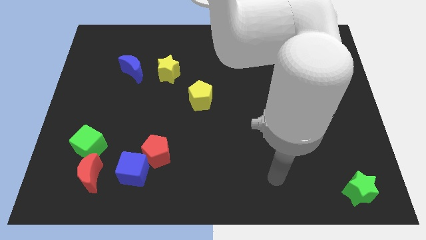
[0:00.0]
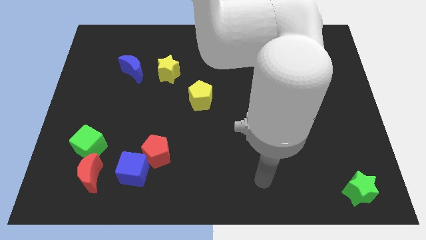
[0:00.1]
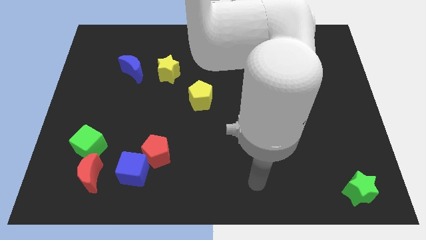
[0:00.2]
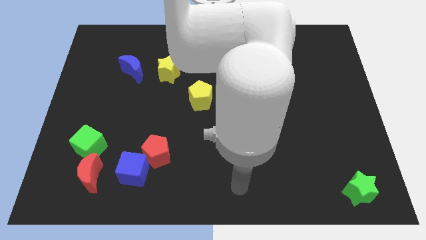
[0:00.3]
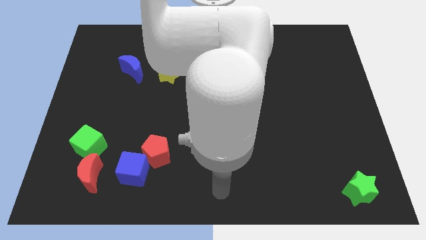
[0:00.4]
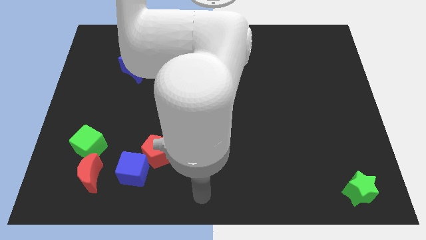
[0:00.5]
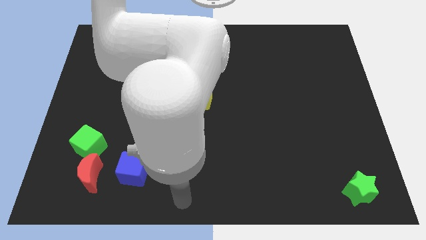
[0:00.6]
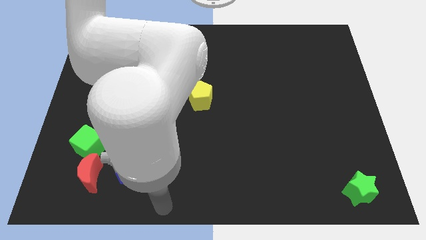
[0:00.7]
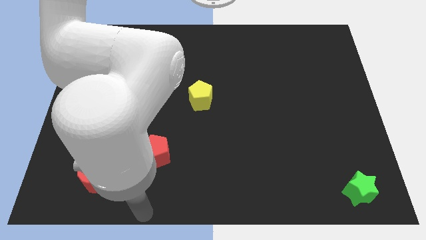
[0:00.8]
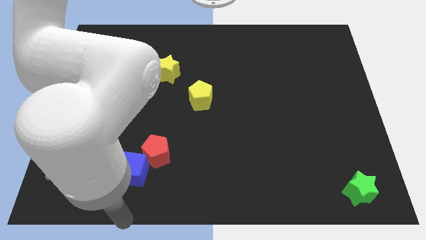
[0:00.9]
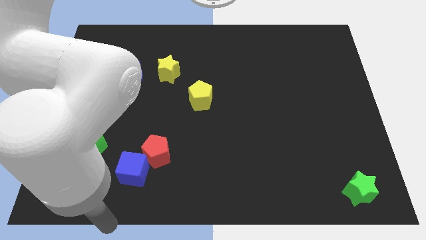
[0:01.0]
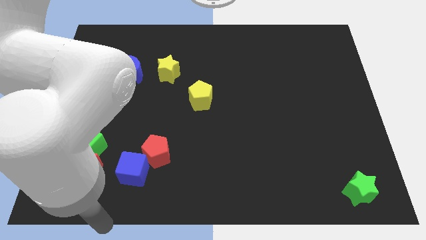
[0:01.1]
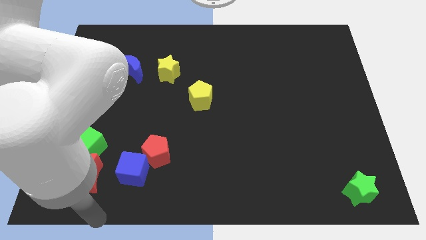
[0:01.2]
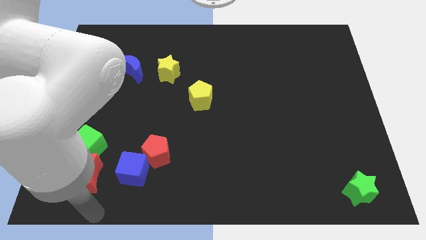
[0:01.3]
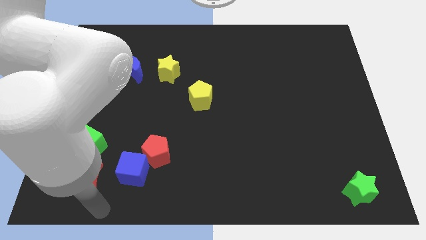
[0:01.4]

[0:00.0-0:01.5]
move the arm near the red moon

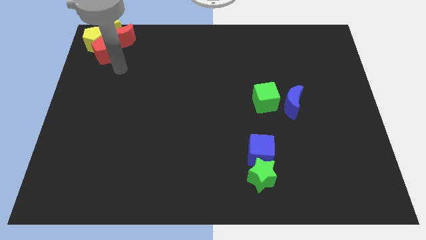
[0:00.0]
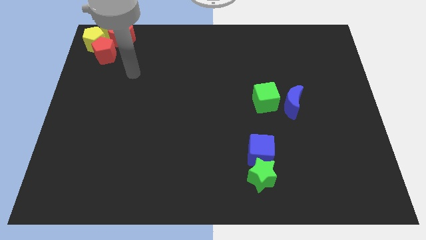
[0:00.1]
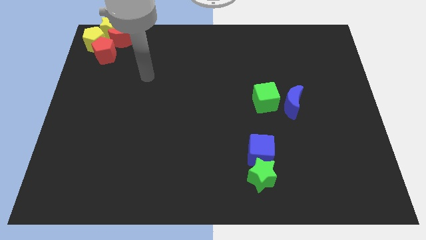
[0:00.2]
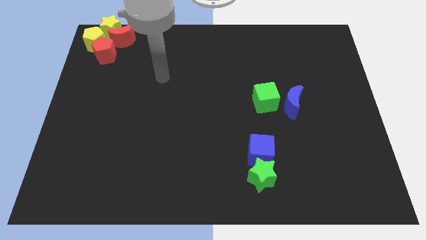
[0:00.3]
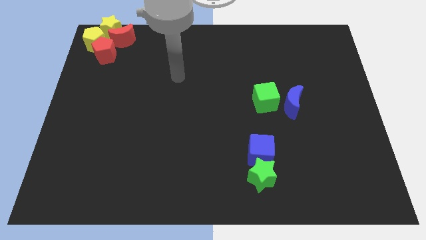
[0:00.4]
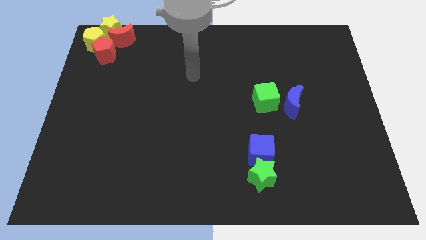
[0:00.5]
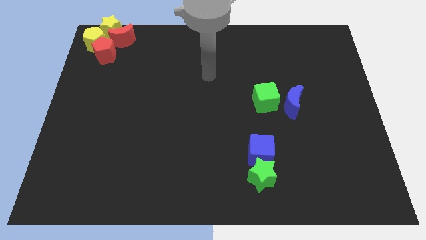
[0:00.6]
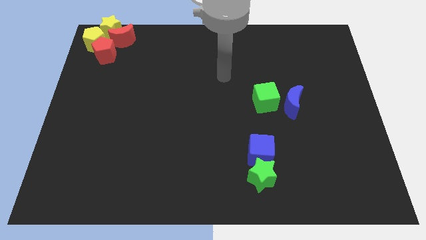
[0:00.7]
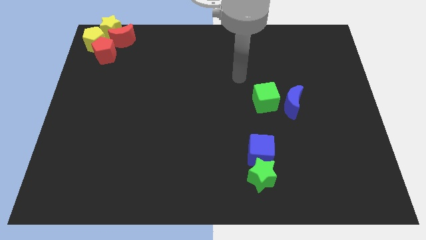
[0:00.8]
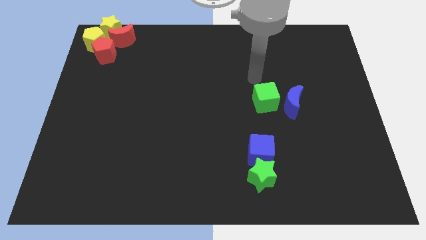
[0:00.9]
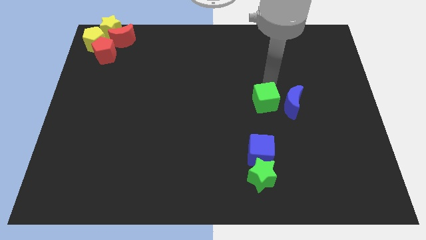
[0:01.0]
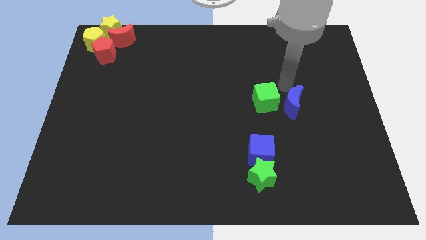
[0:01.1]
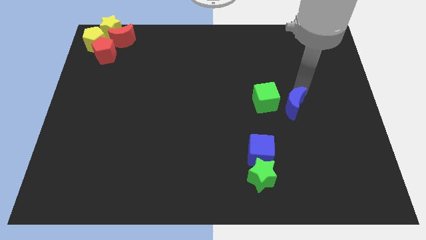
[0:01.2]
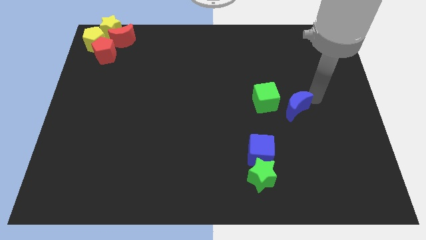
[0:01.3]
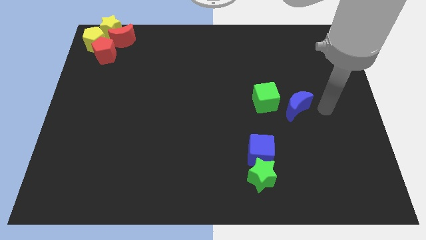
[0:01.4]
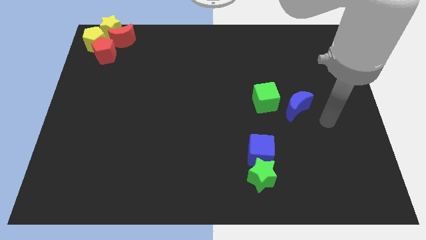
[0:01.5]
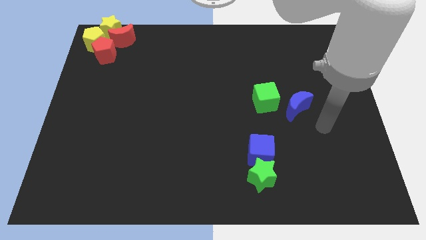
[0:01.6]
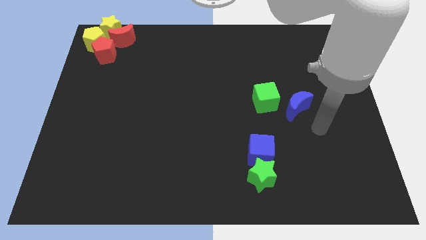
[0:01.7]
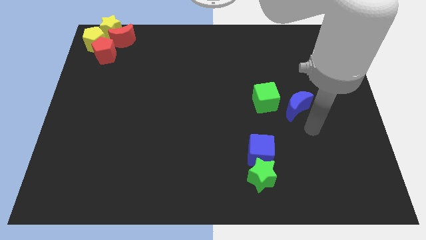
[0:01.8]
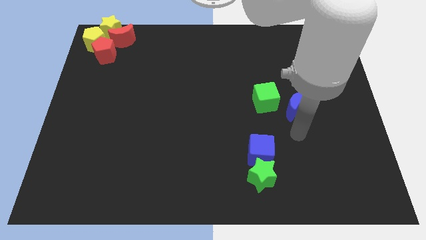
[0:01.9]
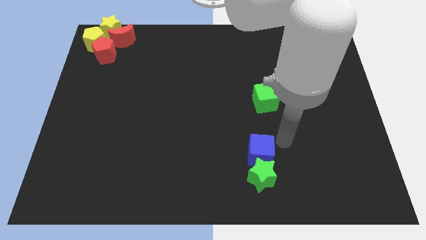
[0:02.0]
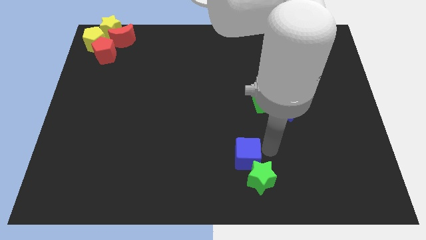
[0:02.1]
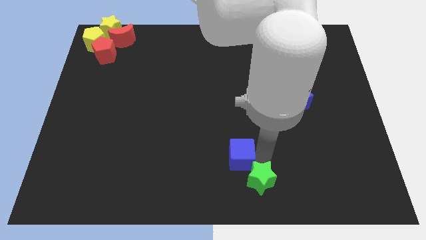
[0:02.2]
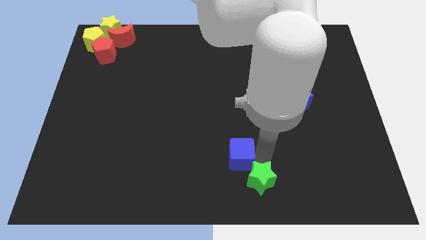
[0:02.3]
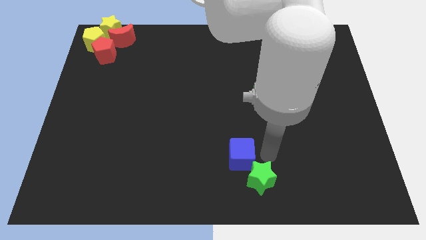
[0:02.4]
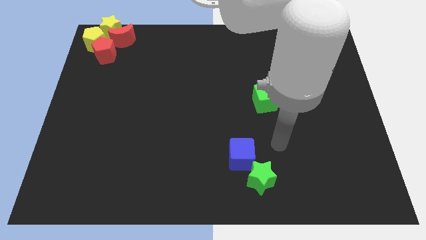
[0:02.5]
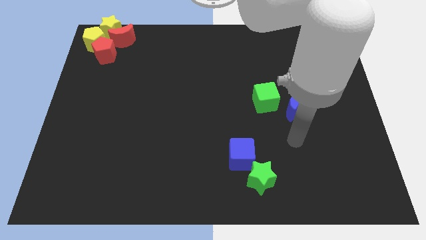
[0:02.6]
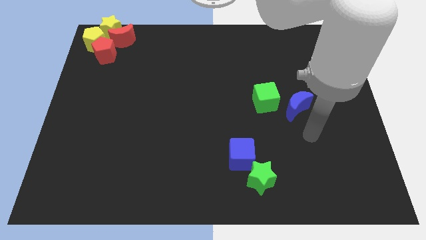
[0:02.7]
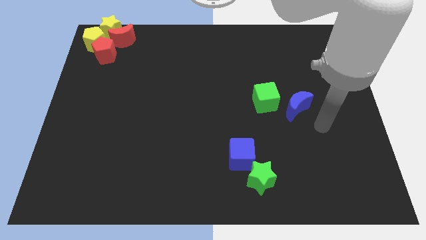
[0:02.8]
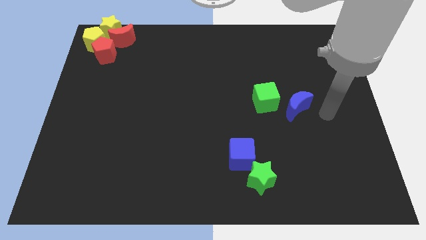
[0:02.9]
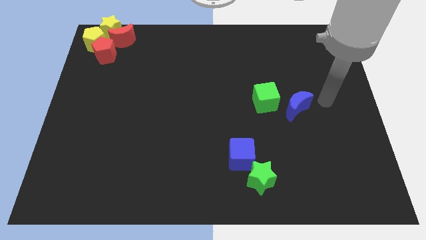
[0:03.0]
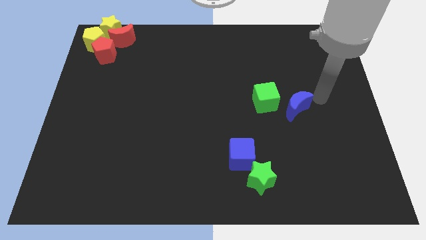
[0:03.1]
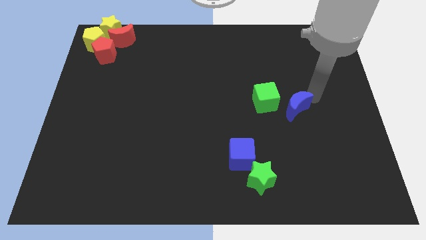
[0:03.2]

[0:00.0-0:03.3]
slide the blue cube slightly to the left side of the board

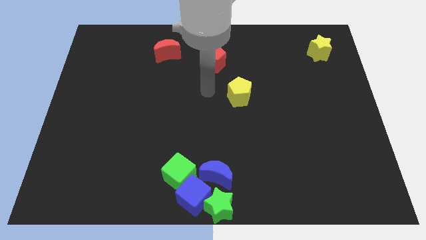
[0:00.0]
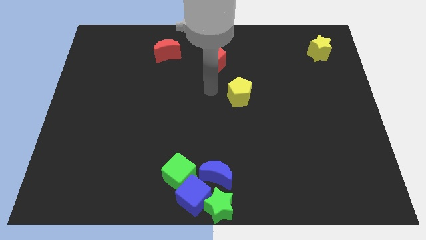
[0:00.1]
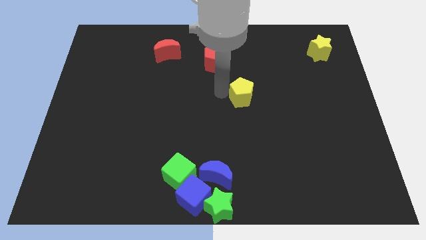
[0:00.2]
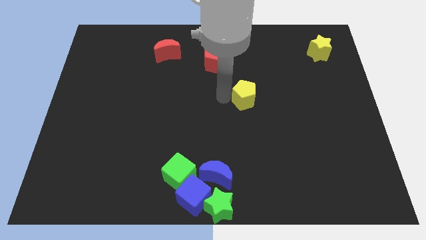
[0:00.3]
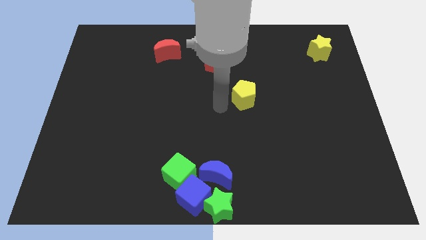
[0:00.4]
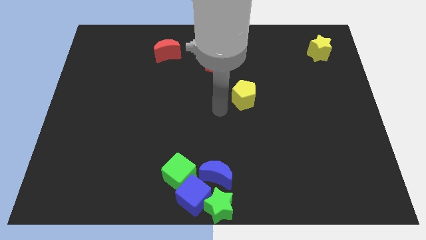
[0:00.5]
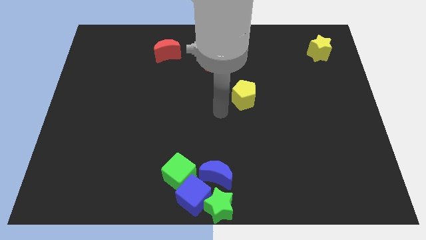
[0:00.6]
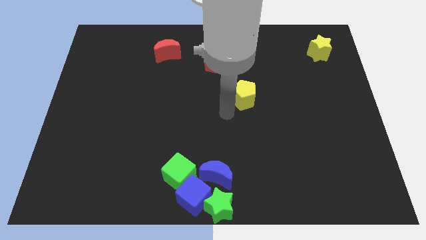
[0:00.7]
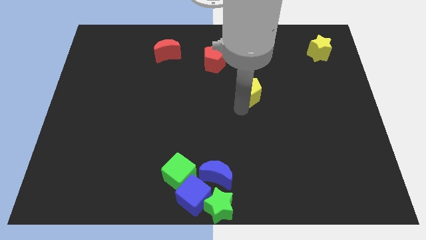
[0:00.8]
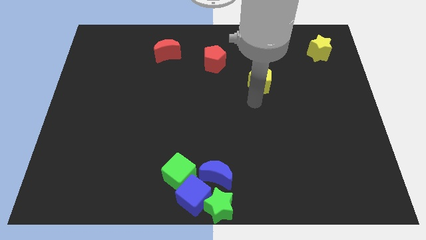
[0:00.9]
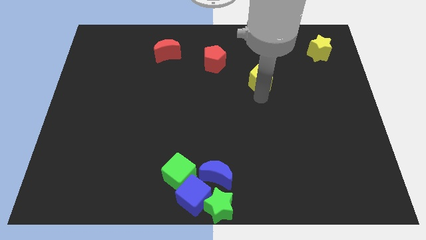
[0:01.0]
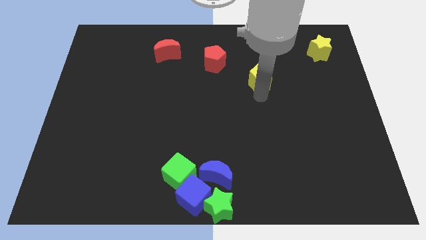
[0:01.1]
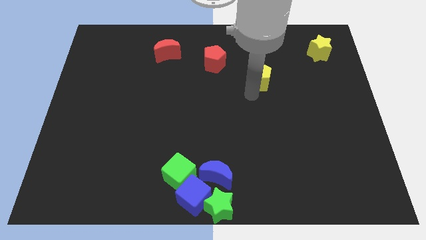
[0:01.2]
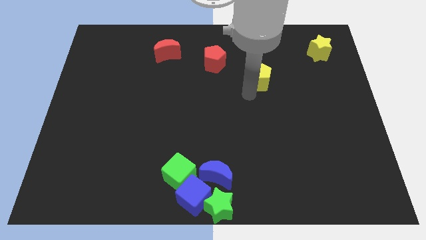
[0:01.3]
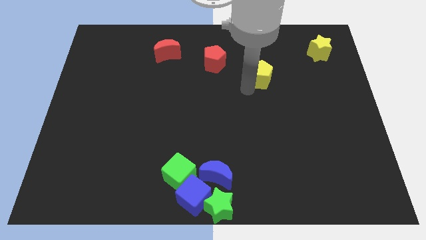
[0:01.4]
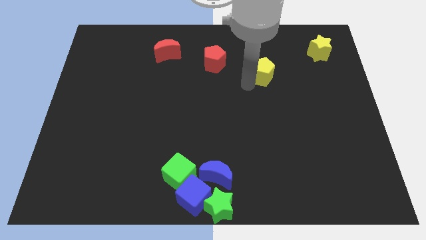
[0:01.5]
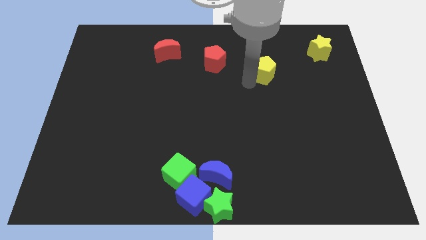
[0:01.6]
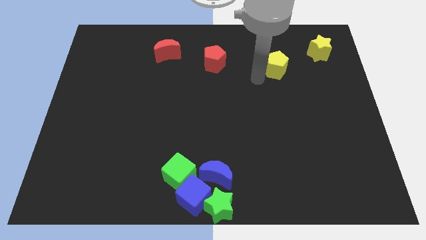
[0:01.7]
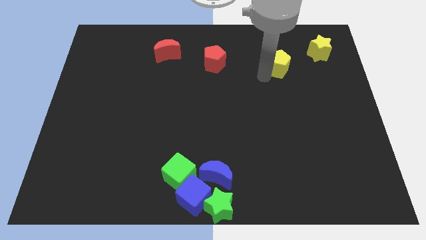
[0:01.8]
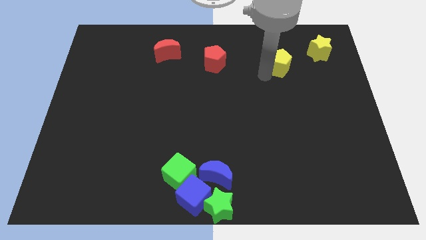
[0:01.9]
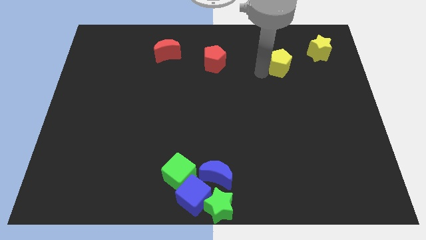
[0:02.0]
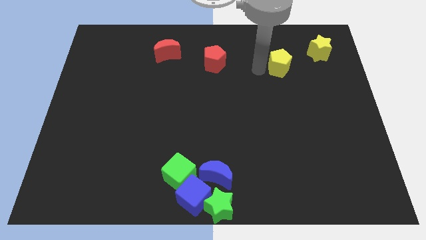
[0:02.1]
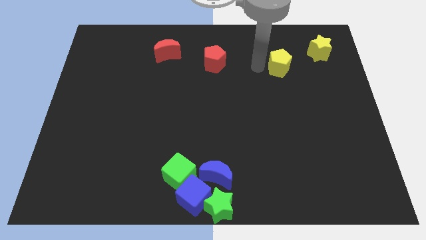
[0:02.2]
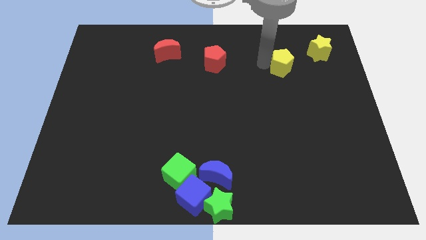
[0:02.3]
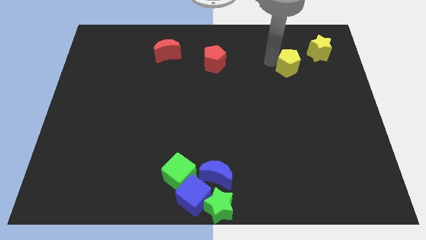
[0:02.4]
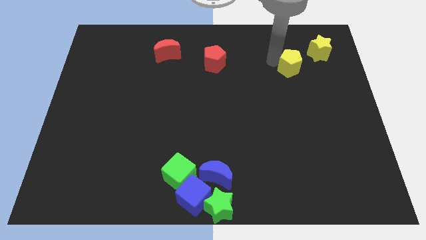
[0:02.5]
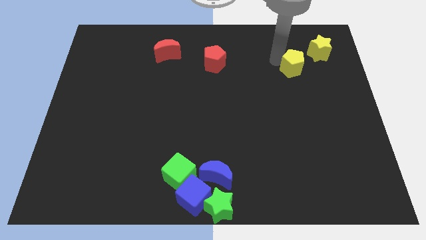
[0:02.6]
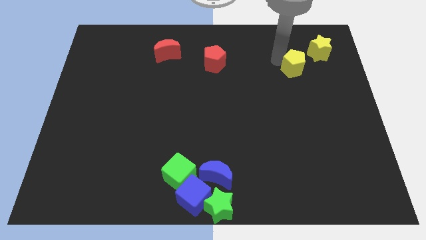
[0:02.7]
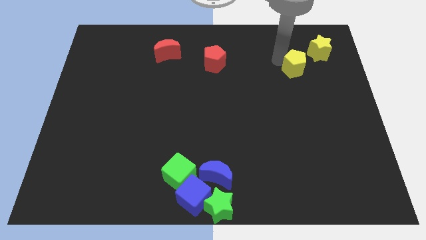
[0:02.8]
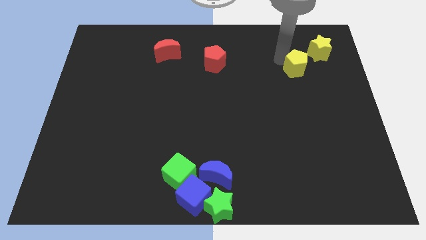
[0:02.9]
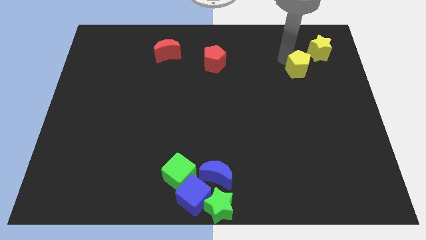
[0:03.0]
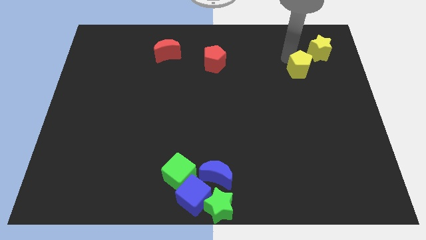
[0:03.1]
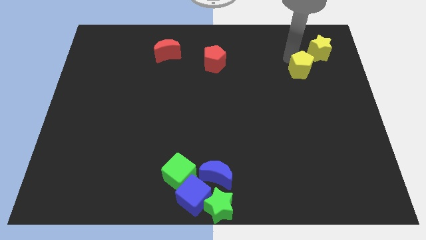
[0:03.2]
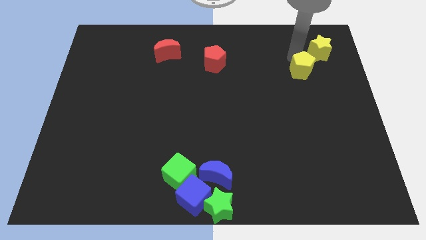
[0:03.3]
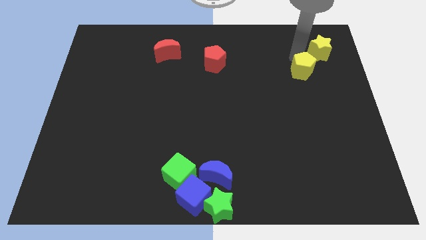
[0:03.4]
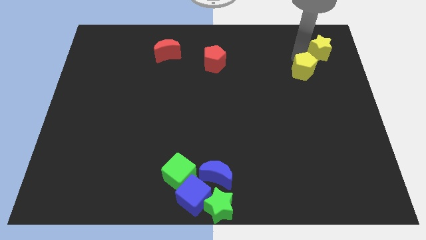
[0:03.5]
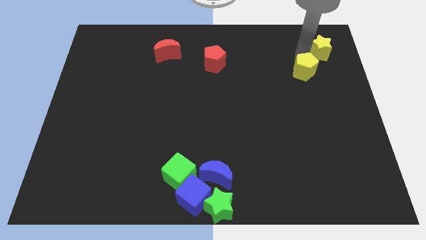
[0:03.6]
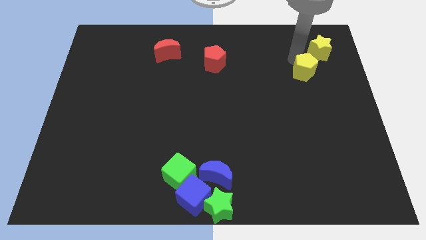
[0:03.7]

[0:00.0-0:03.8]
move the yellow pentagon diagonally to the left of the yellow star

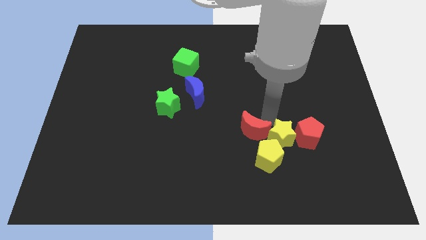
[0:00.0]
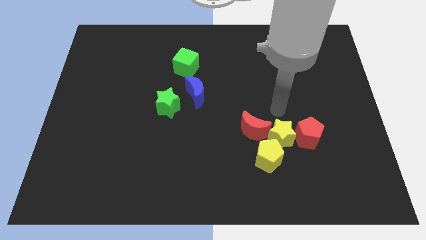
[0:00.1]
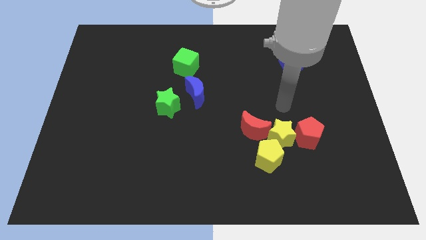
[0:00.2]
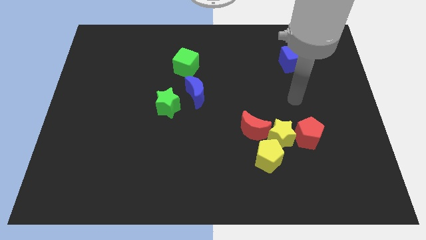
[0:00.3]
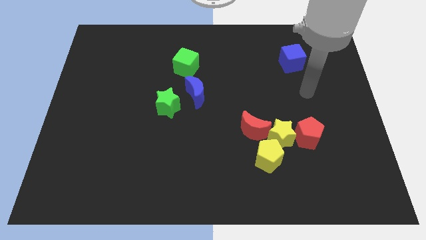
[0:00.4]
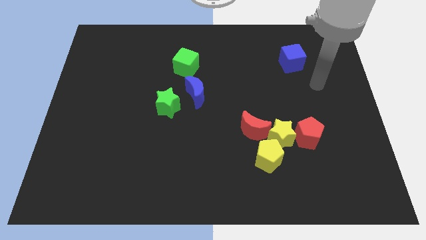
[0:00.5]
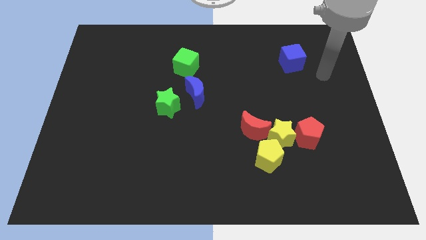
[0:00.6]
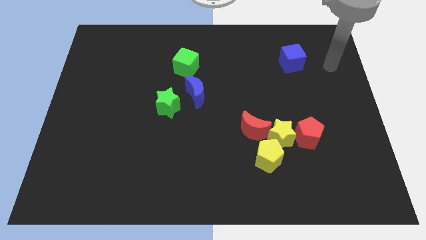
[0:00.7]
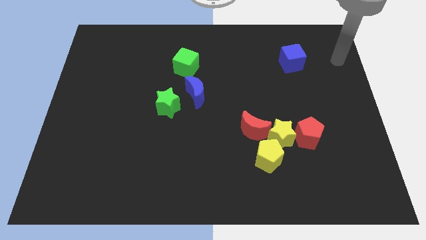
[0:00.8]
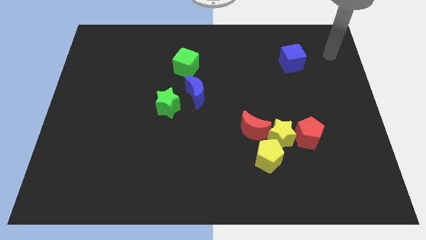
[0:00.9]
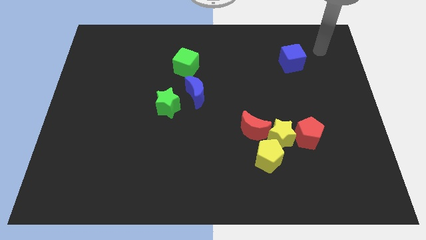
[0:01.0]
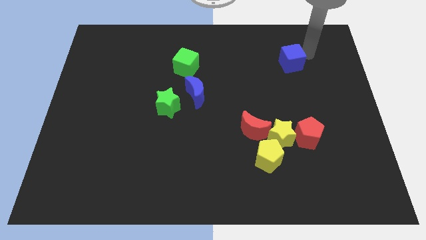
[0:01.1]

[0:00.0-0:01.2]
place your arm at the right side of the blue cube
